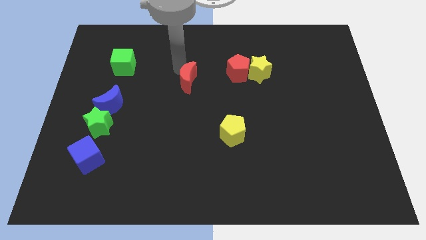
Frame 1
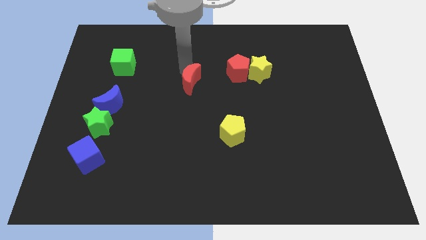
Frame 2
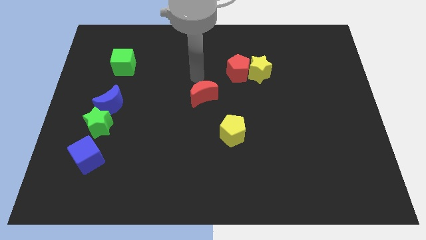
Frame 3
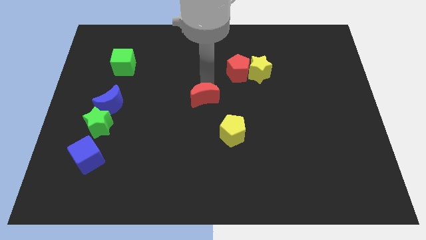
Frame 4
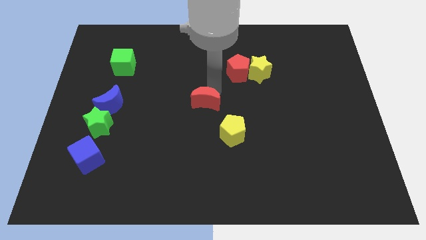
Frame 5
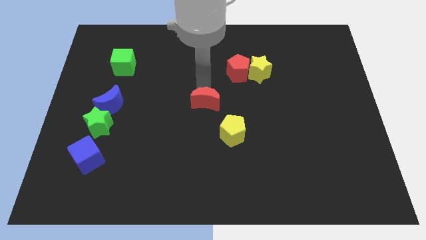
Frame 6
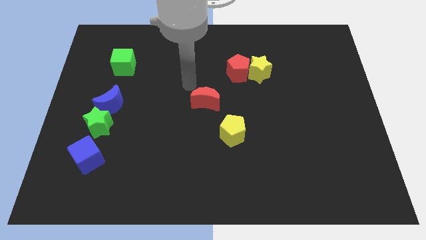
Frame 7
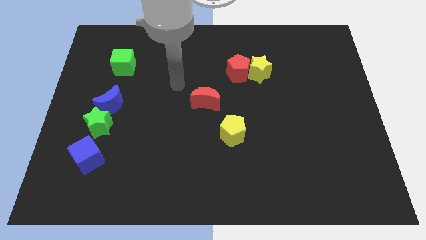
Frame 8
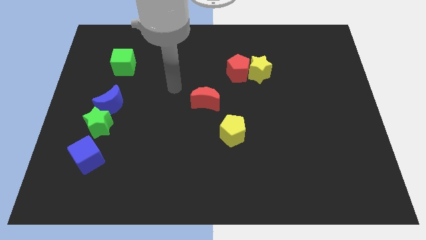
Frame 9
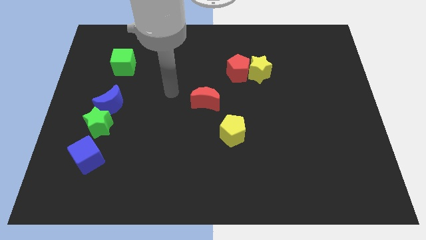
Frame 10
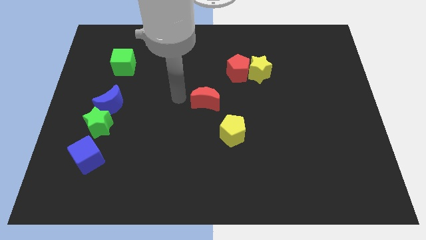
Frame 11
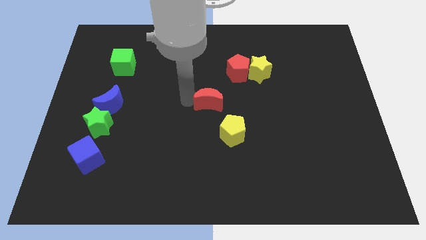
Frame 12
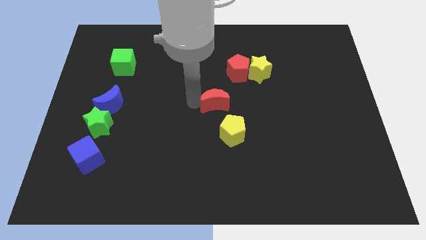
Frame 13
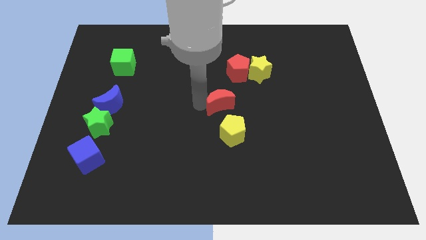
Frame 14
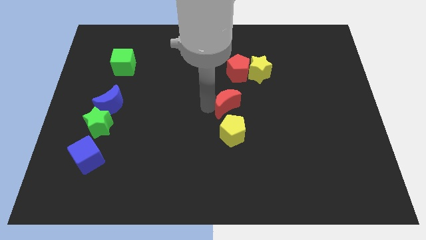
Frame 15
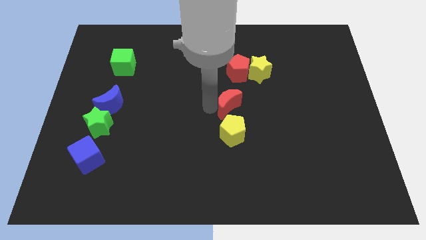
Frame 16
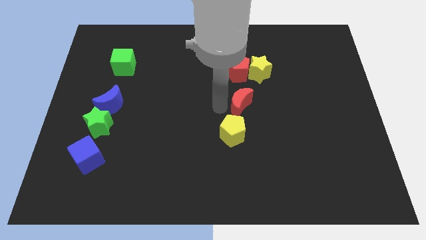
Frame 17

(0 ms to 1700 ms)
push red crescent above yellow pentagon

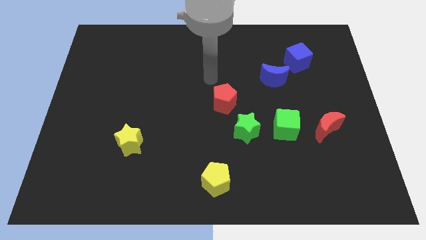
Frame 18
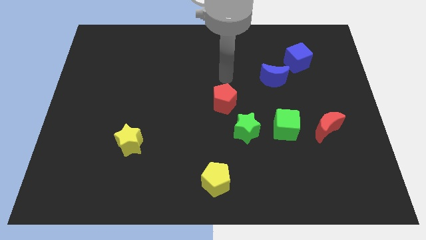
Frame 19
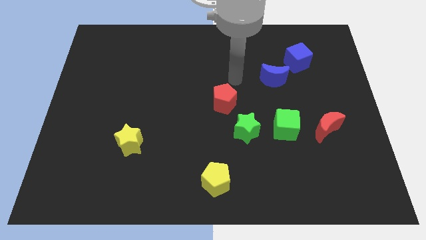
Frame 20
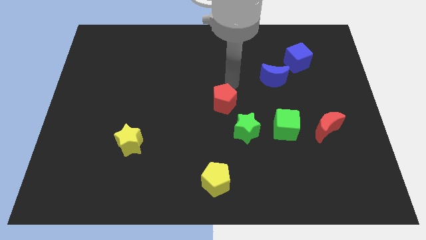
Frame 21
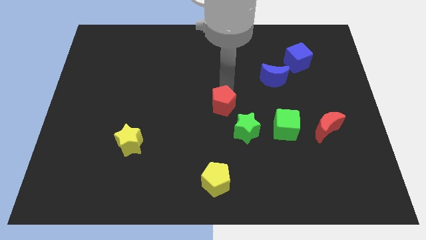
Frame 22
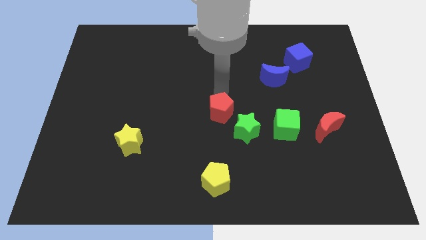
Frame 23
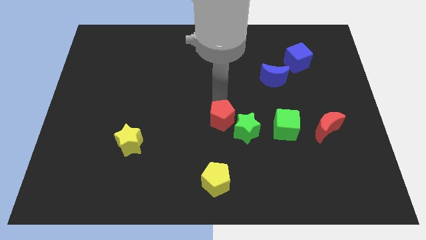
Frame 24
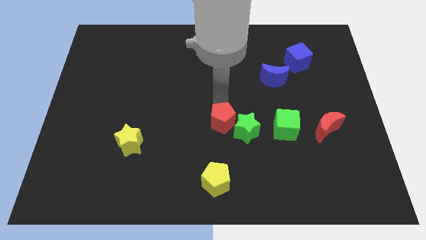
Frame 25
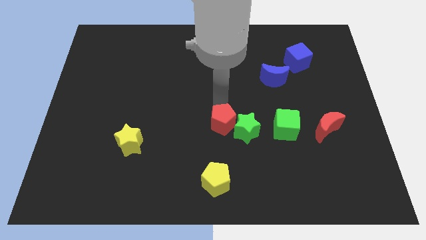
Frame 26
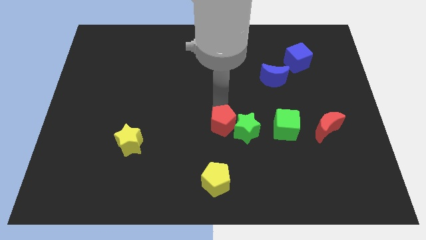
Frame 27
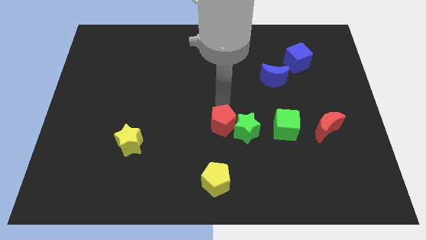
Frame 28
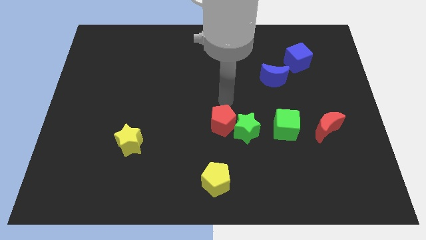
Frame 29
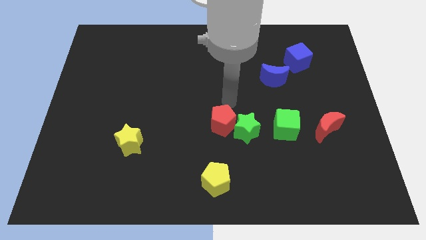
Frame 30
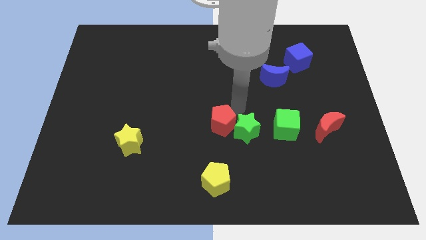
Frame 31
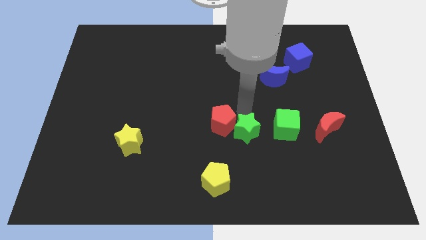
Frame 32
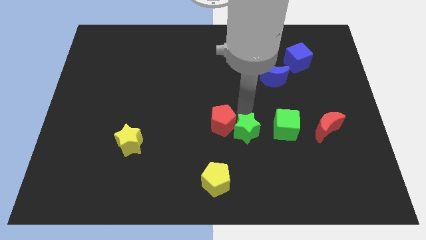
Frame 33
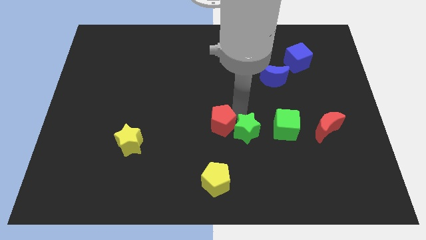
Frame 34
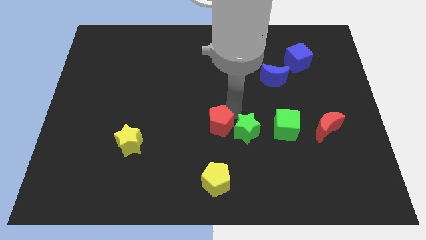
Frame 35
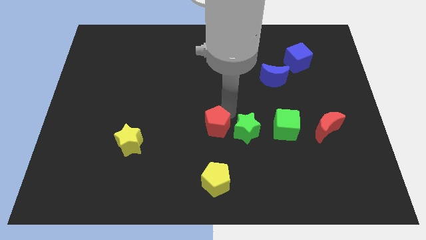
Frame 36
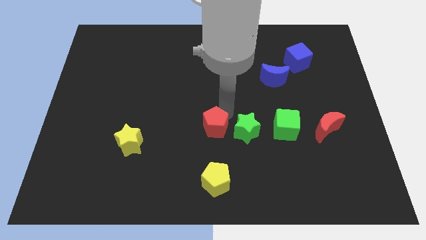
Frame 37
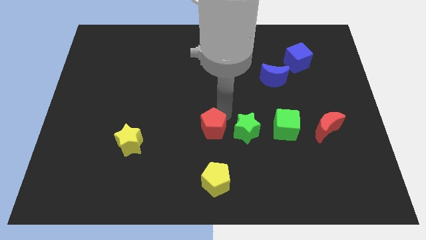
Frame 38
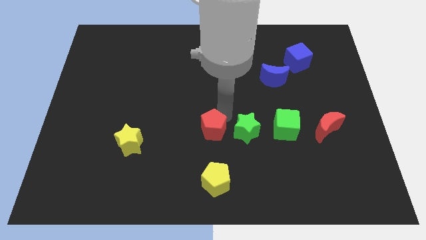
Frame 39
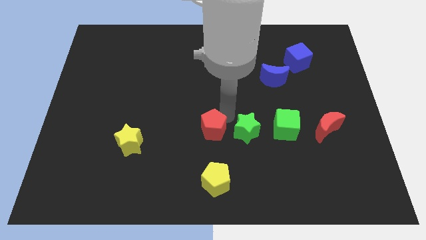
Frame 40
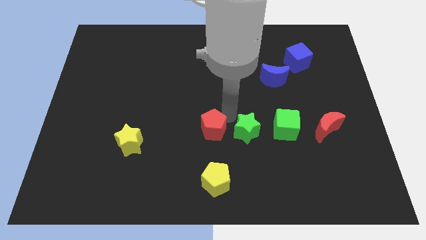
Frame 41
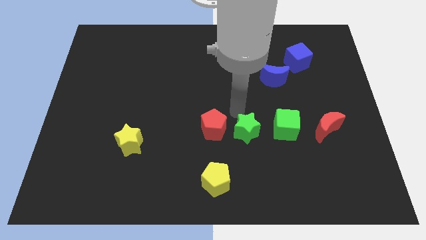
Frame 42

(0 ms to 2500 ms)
place the red pentagon to the center of the board beside the green star

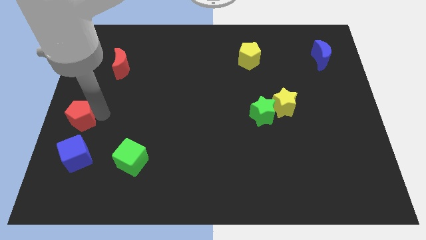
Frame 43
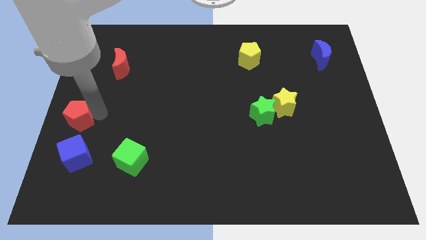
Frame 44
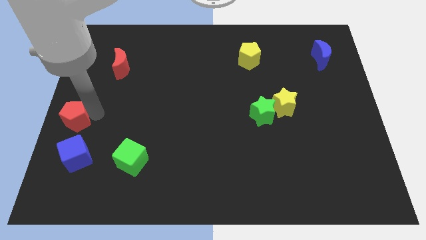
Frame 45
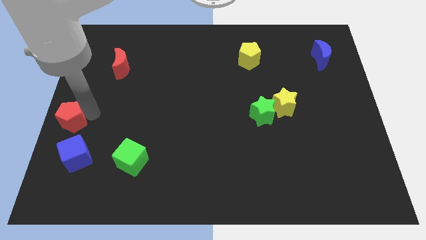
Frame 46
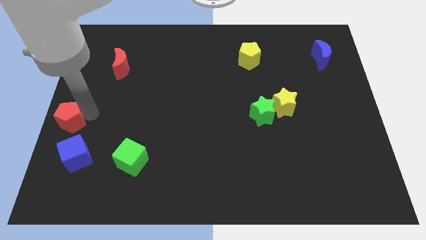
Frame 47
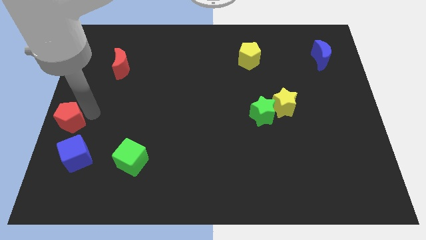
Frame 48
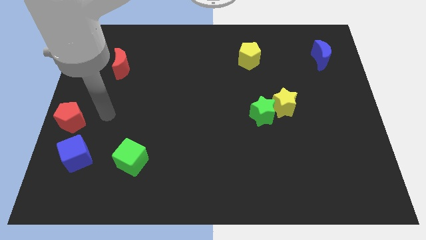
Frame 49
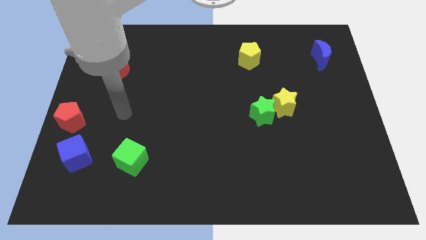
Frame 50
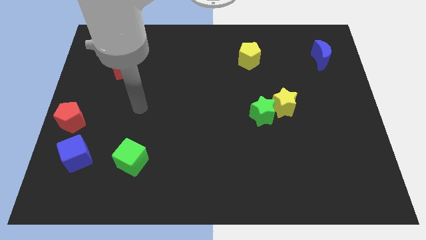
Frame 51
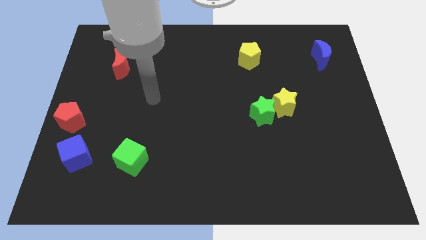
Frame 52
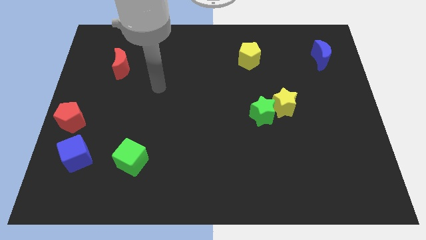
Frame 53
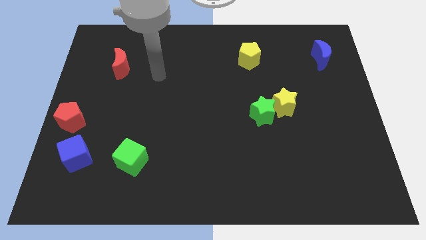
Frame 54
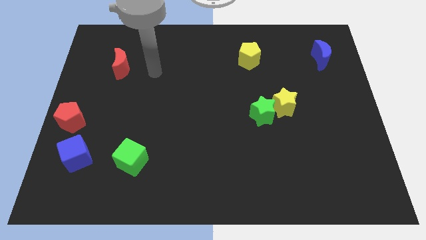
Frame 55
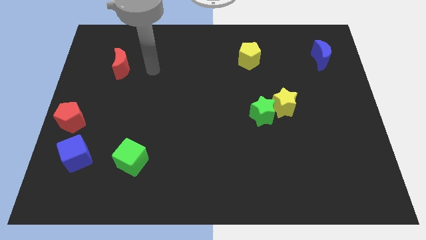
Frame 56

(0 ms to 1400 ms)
push the red pentagon to the center left of the board

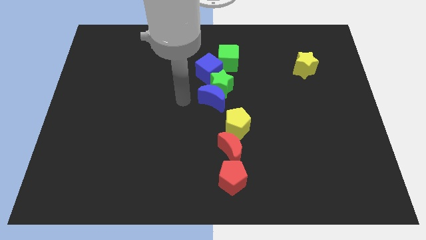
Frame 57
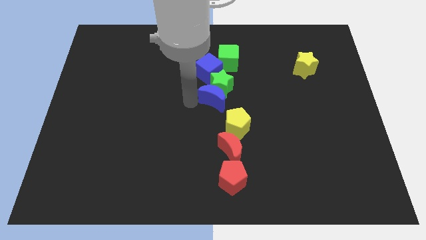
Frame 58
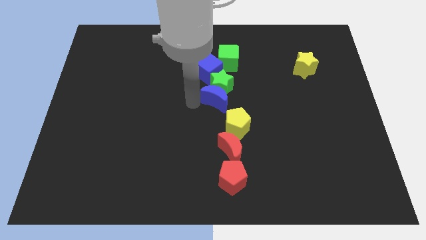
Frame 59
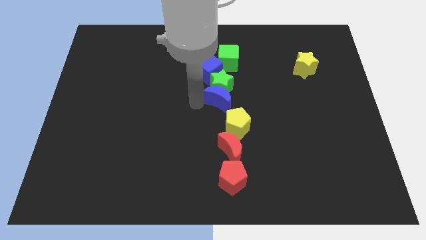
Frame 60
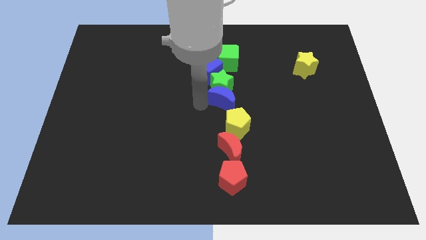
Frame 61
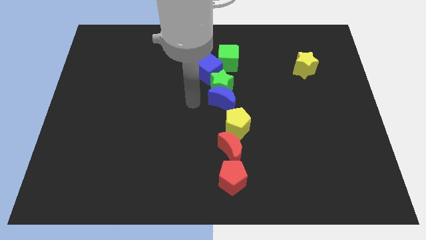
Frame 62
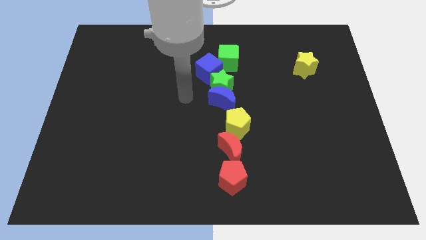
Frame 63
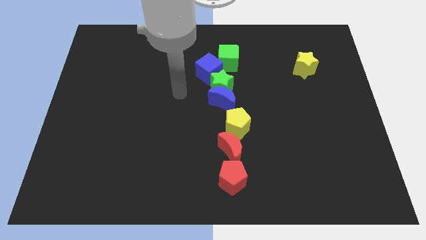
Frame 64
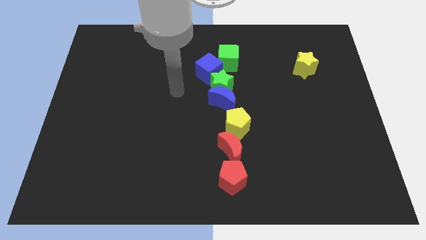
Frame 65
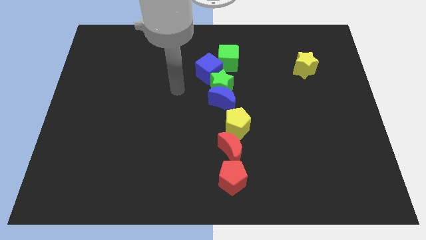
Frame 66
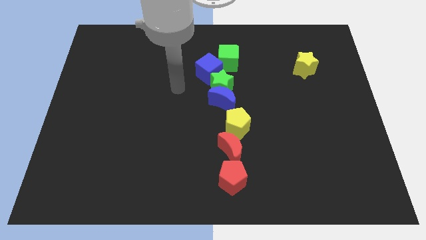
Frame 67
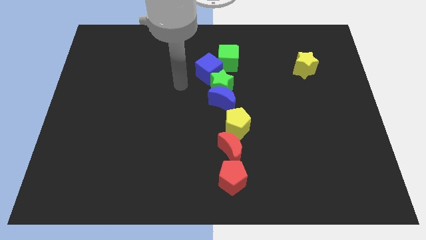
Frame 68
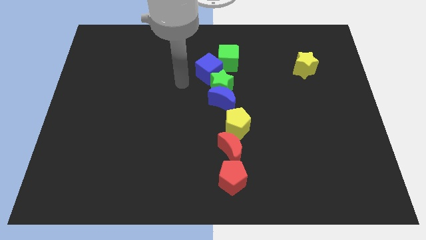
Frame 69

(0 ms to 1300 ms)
put the blue crescent vertically below the green star

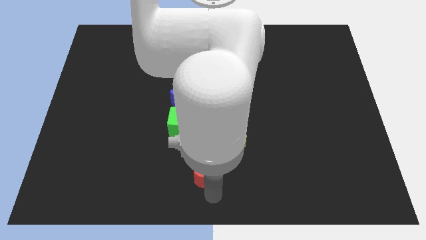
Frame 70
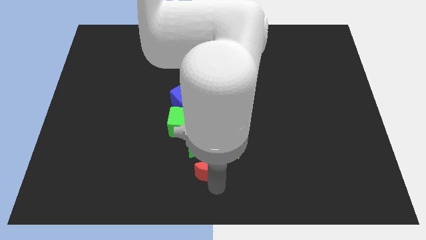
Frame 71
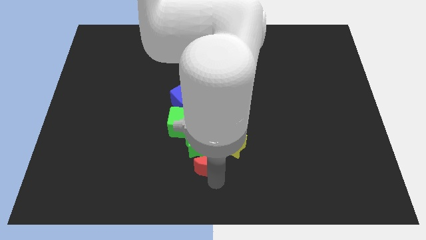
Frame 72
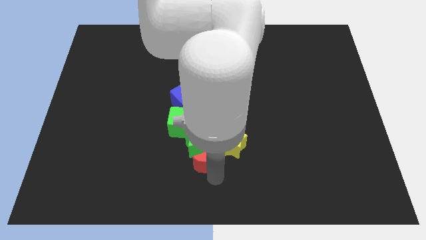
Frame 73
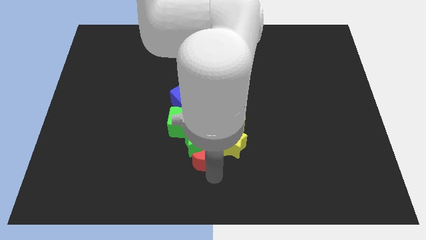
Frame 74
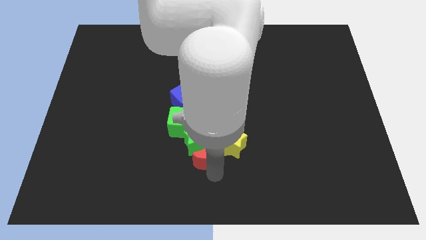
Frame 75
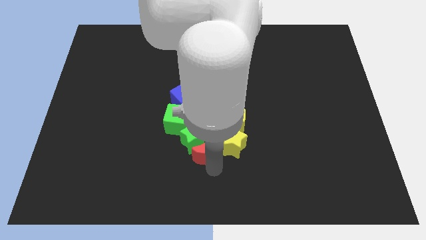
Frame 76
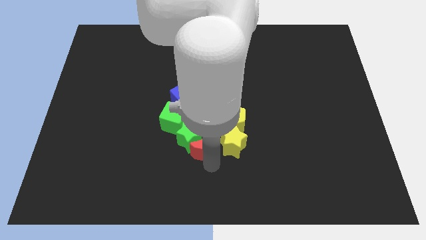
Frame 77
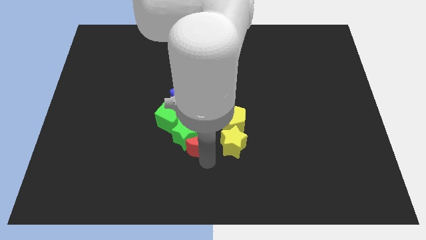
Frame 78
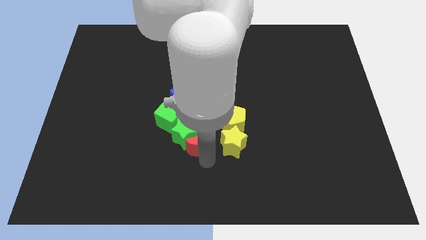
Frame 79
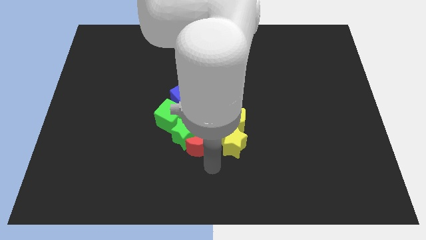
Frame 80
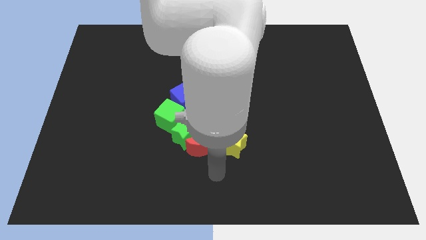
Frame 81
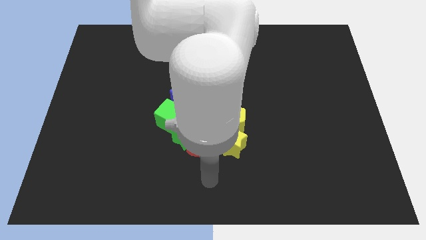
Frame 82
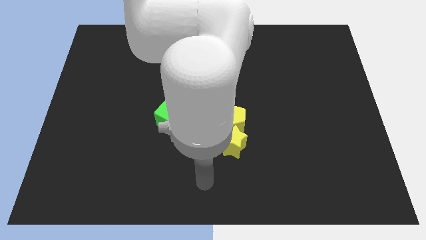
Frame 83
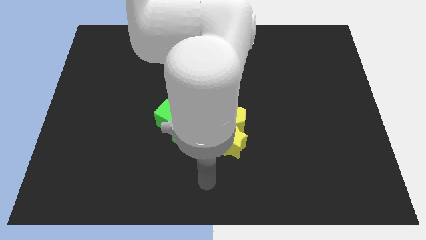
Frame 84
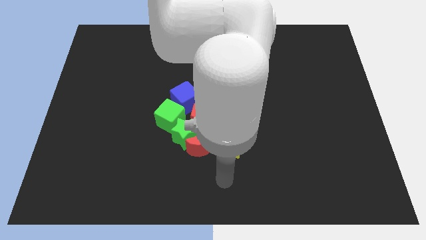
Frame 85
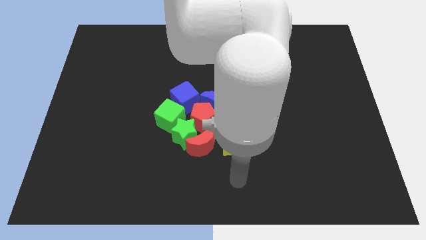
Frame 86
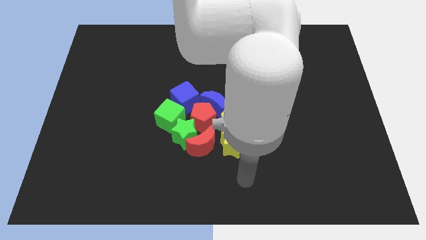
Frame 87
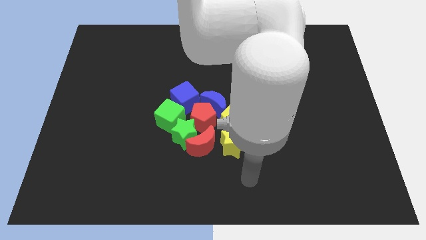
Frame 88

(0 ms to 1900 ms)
push the red moon into the green star

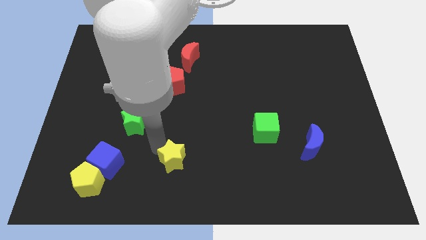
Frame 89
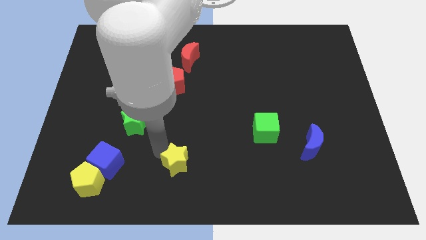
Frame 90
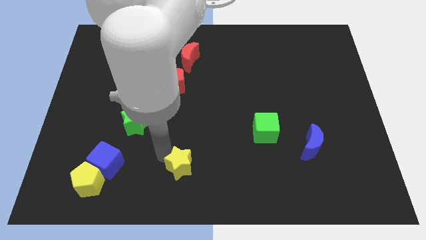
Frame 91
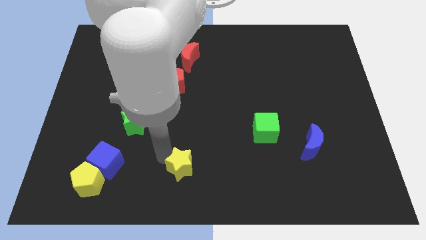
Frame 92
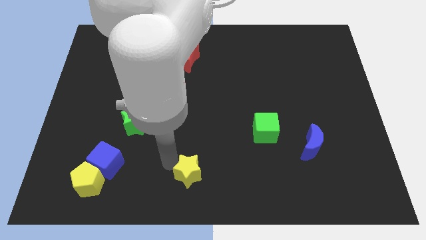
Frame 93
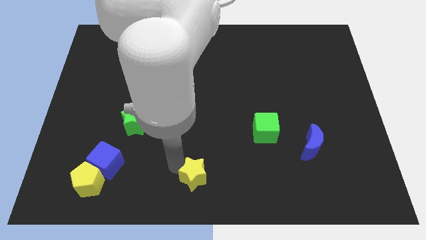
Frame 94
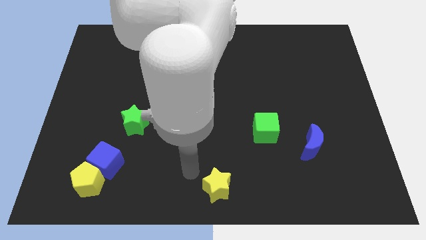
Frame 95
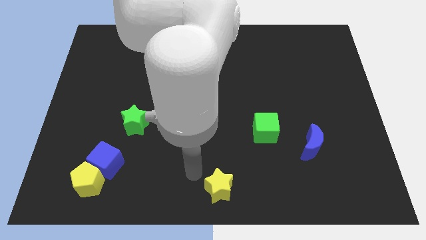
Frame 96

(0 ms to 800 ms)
move yellow star at bottom center
